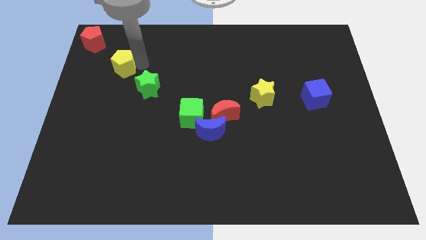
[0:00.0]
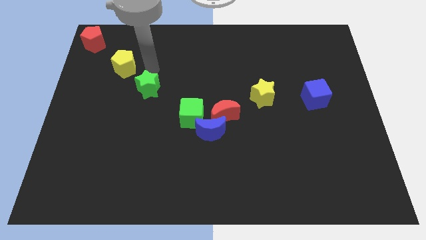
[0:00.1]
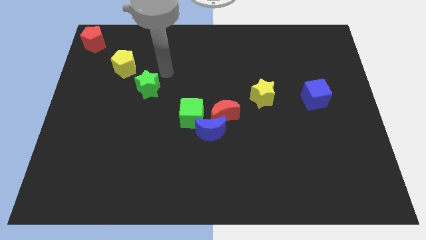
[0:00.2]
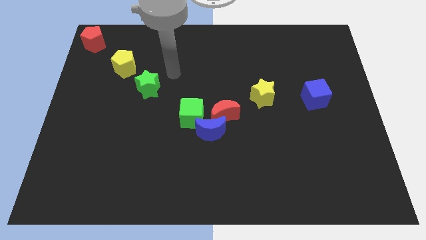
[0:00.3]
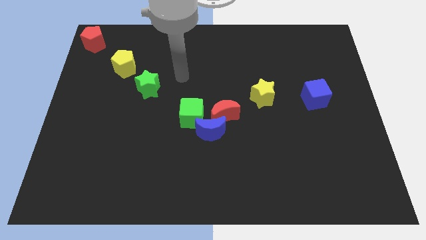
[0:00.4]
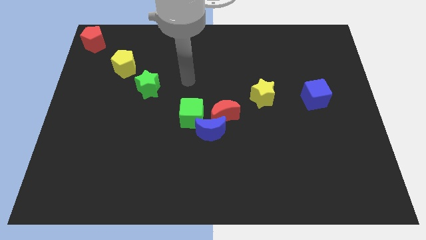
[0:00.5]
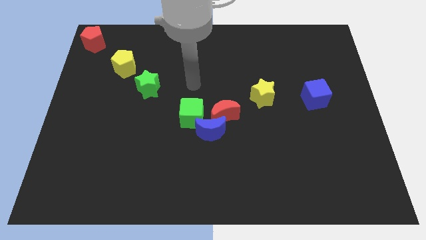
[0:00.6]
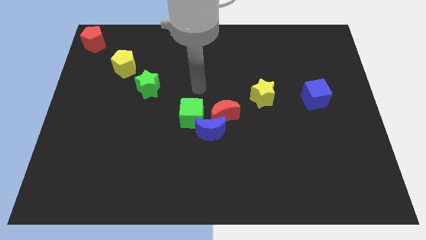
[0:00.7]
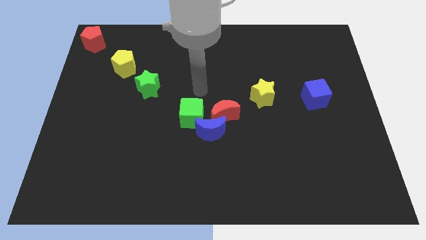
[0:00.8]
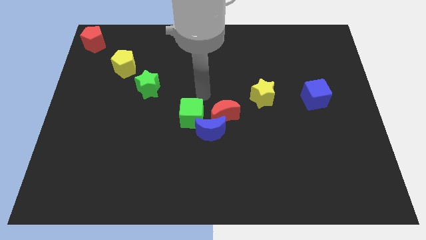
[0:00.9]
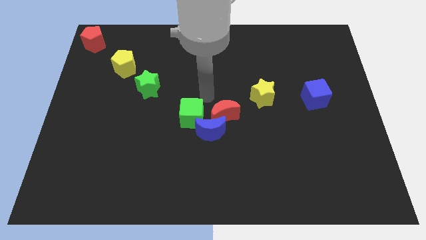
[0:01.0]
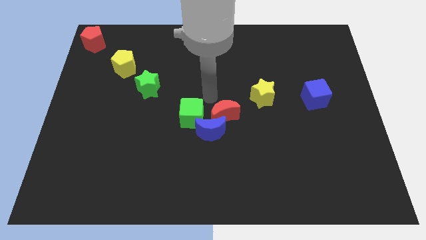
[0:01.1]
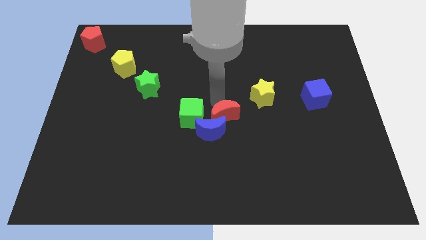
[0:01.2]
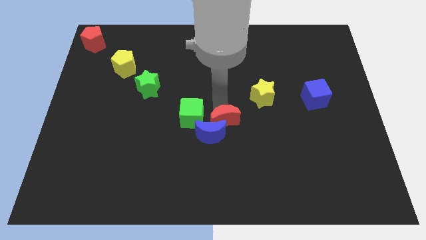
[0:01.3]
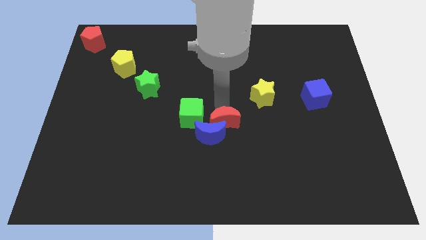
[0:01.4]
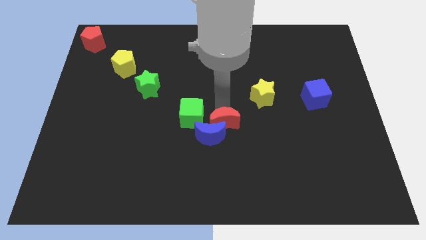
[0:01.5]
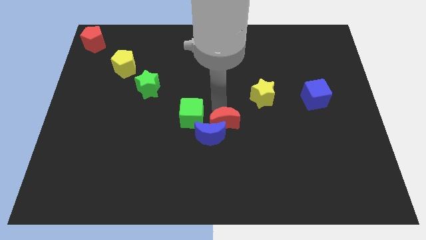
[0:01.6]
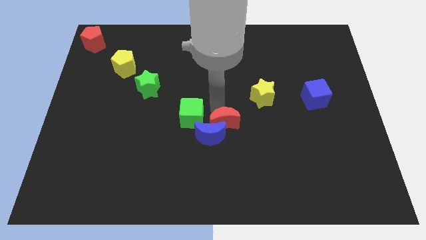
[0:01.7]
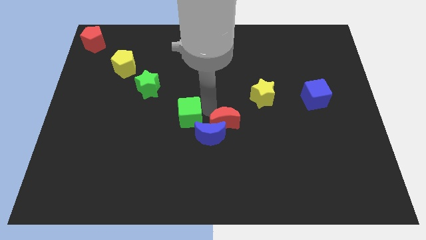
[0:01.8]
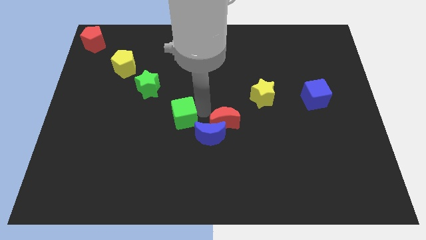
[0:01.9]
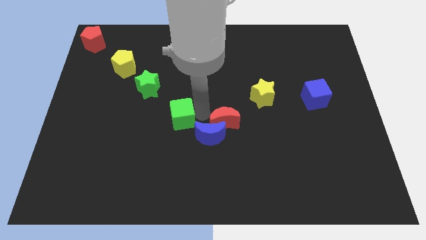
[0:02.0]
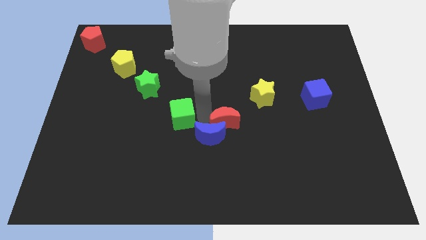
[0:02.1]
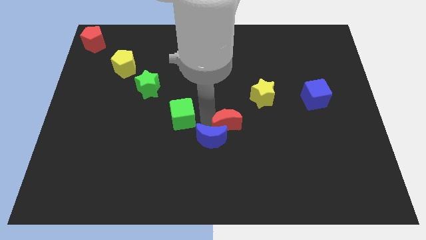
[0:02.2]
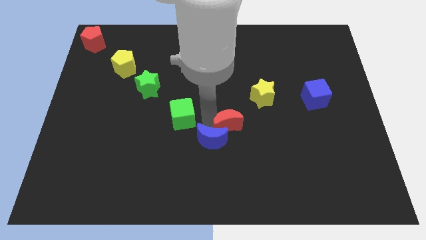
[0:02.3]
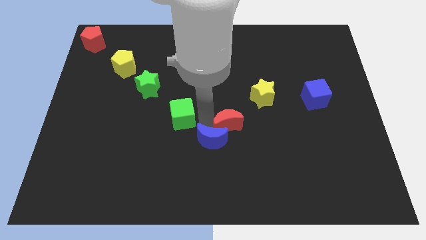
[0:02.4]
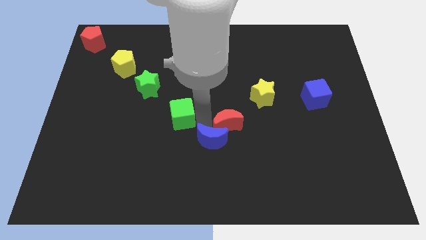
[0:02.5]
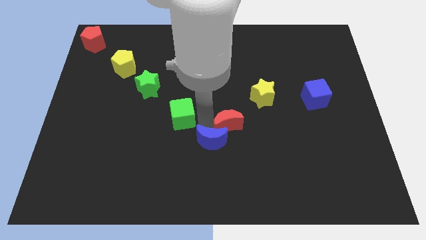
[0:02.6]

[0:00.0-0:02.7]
push the green cube slightly to the left

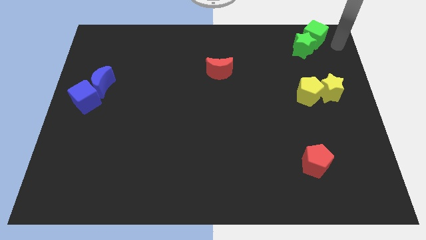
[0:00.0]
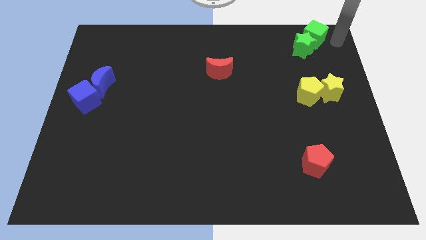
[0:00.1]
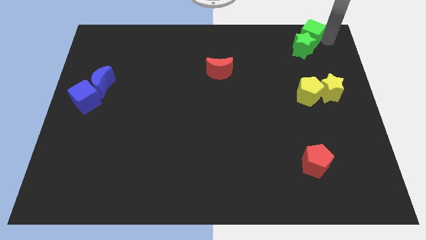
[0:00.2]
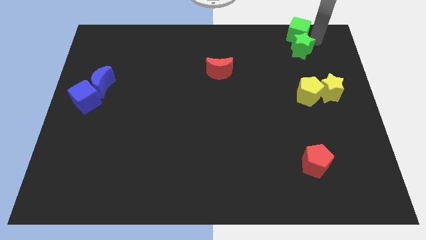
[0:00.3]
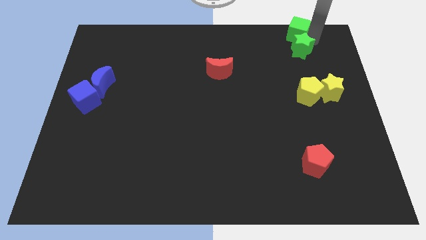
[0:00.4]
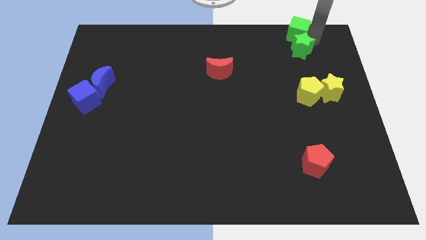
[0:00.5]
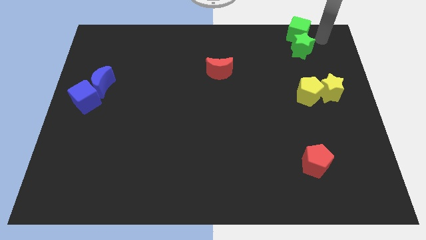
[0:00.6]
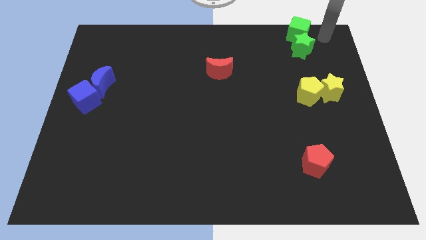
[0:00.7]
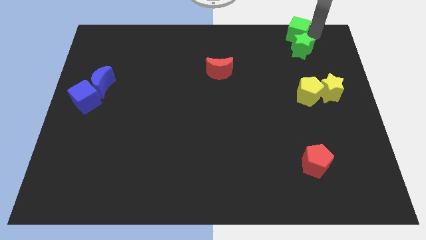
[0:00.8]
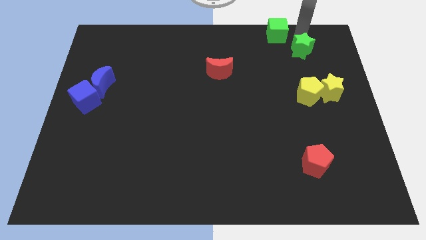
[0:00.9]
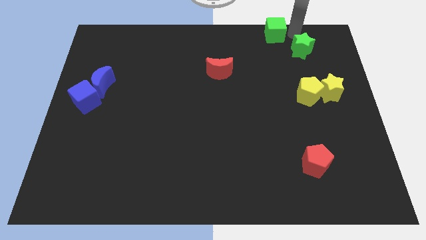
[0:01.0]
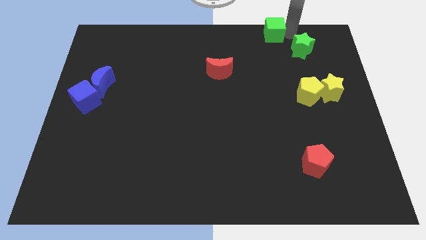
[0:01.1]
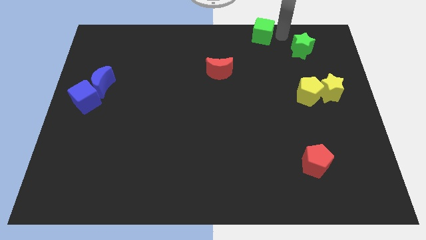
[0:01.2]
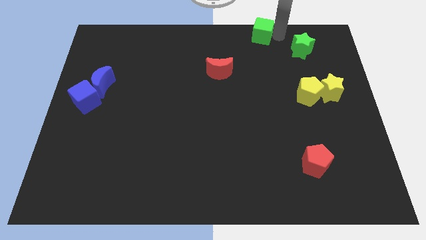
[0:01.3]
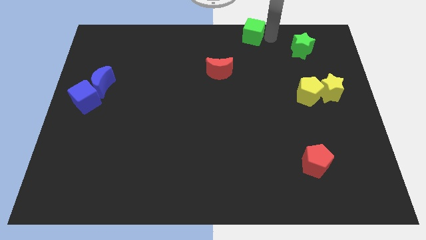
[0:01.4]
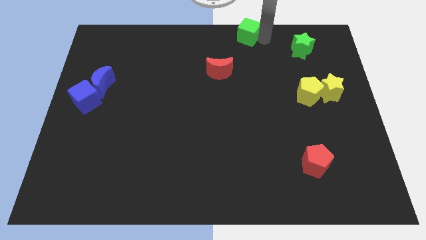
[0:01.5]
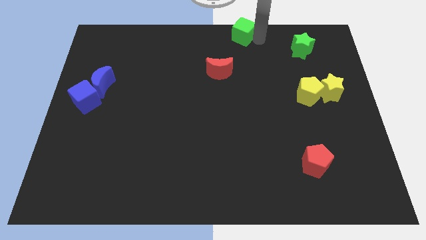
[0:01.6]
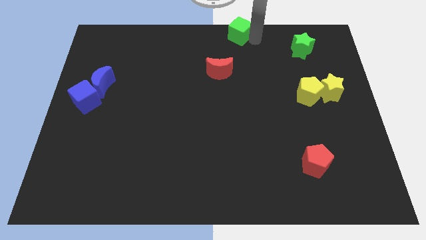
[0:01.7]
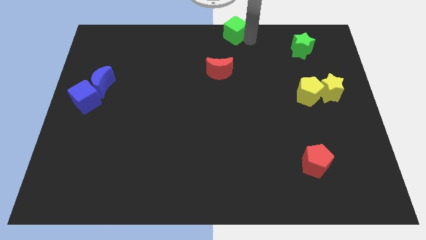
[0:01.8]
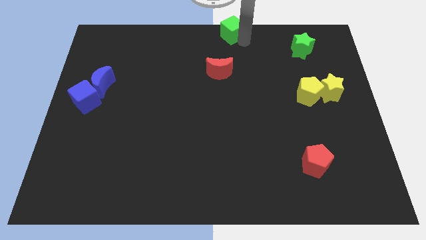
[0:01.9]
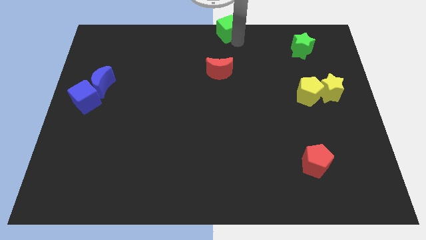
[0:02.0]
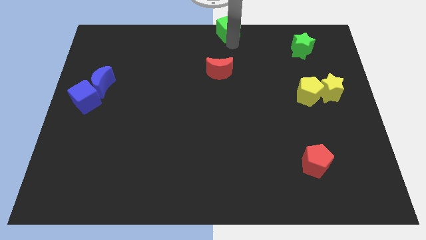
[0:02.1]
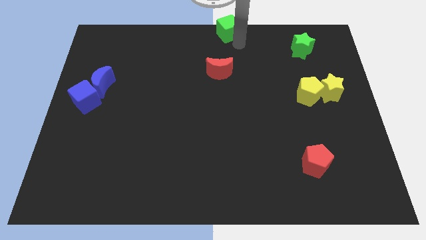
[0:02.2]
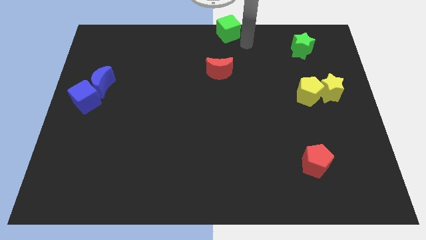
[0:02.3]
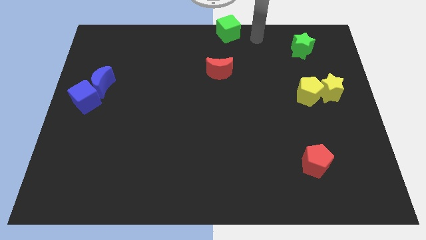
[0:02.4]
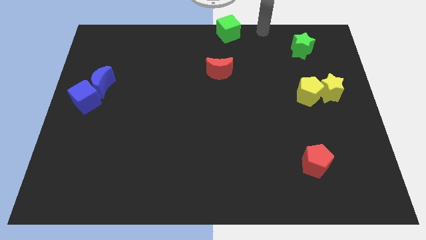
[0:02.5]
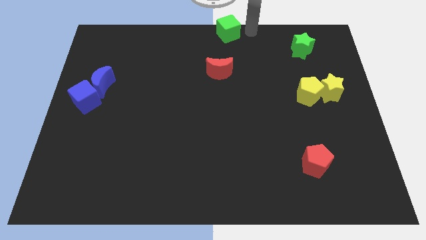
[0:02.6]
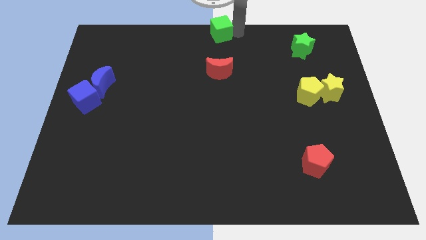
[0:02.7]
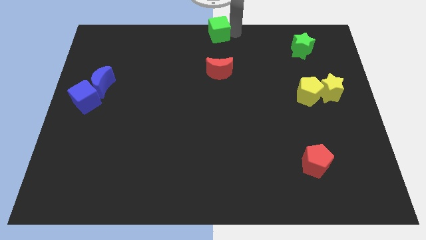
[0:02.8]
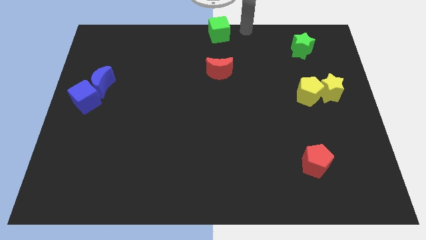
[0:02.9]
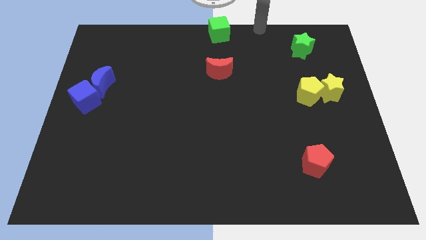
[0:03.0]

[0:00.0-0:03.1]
move the green cube to the top centre on the board

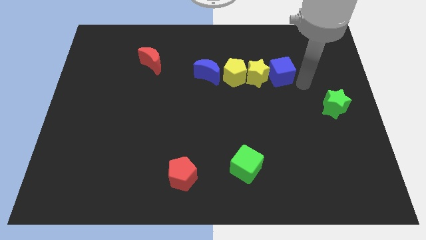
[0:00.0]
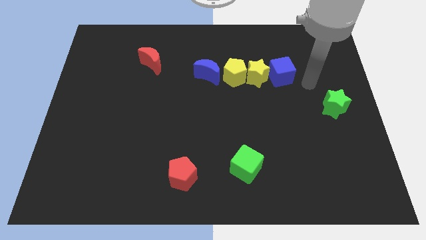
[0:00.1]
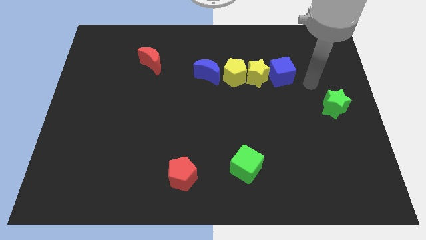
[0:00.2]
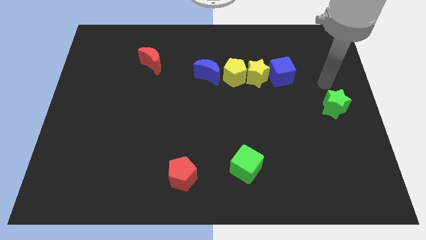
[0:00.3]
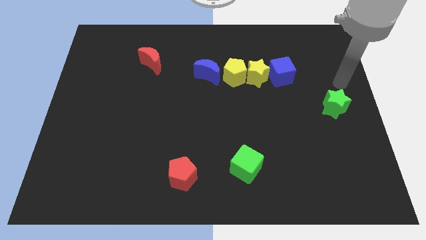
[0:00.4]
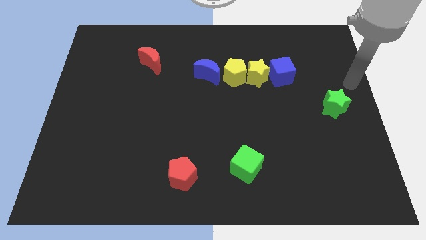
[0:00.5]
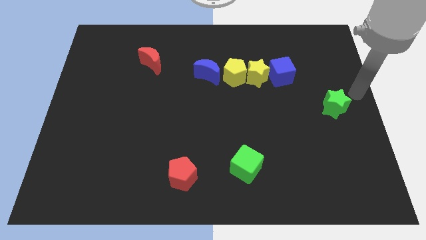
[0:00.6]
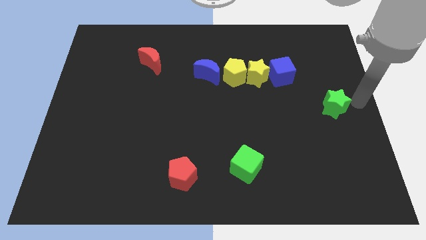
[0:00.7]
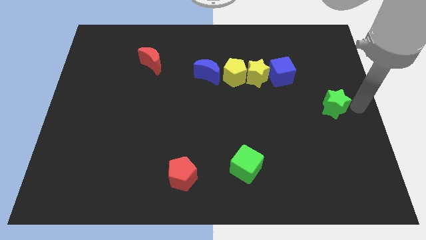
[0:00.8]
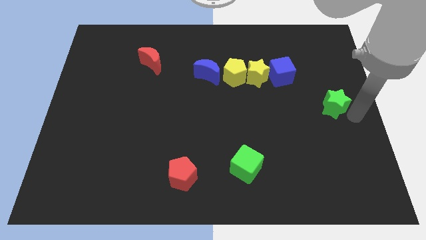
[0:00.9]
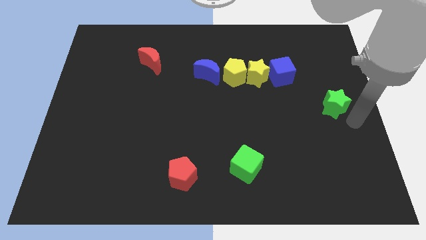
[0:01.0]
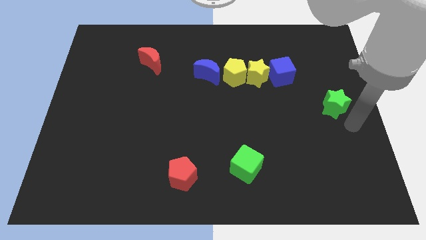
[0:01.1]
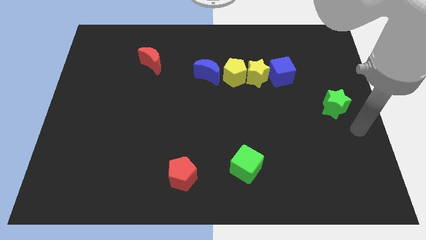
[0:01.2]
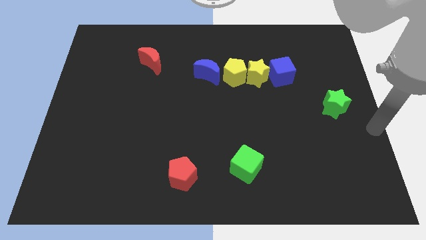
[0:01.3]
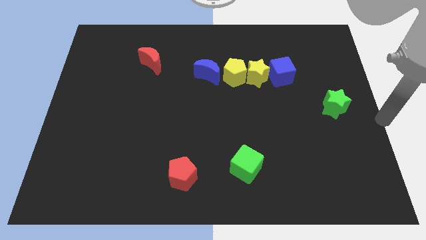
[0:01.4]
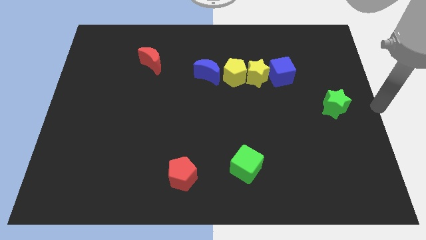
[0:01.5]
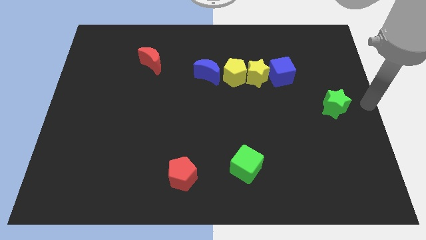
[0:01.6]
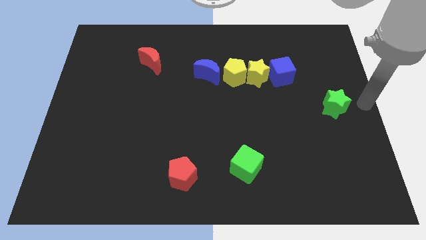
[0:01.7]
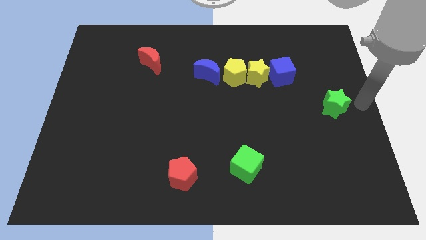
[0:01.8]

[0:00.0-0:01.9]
move your arm away from the blue cube

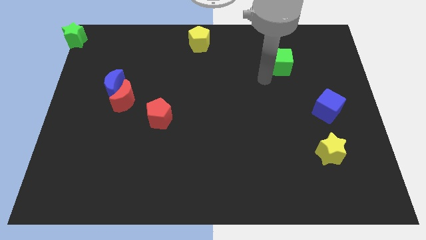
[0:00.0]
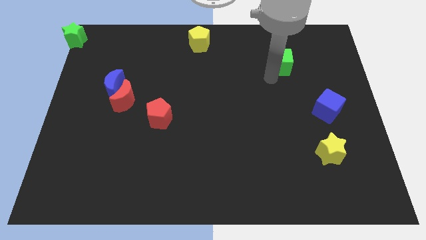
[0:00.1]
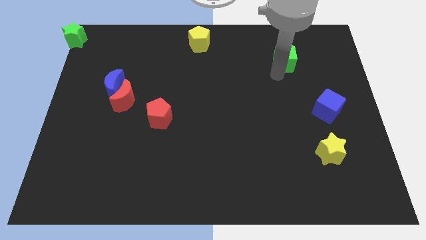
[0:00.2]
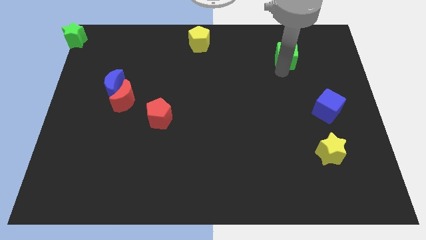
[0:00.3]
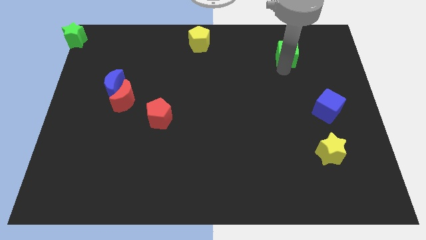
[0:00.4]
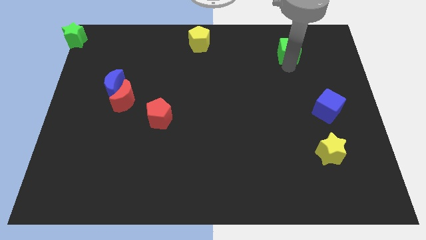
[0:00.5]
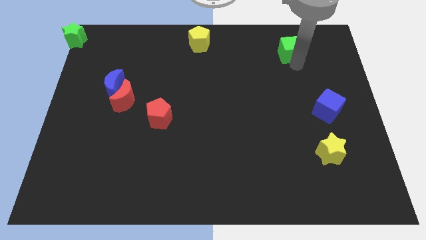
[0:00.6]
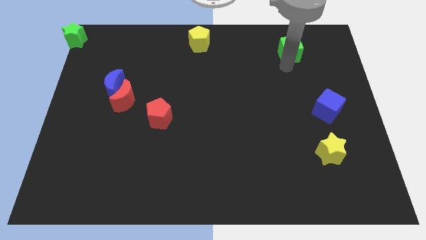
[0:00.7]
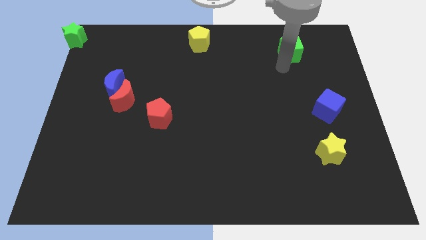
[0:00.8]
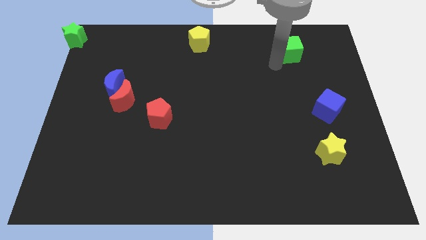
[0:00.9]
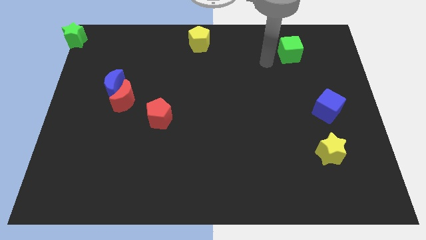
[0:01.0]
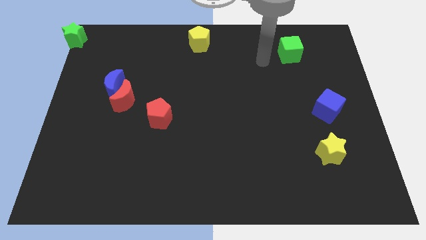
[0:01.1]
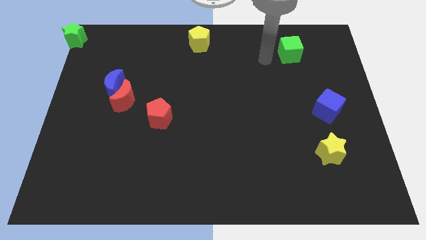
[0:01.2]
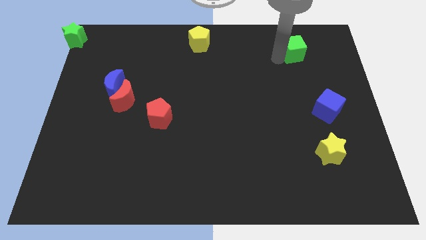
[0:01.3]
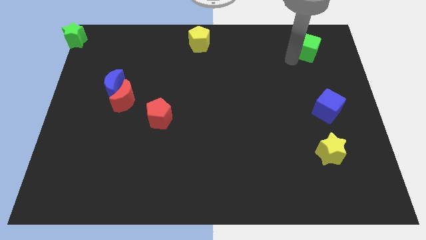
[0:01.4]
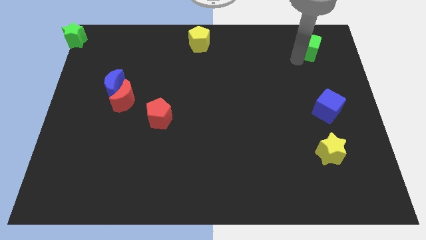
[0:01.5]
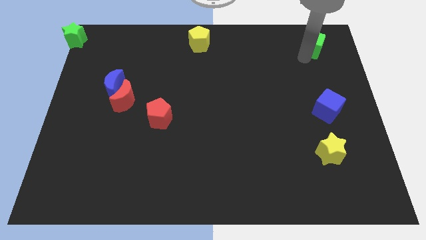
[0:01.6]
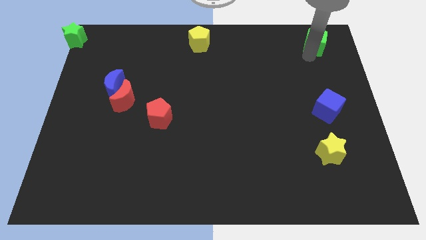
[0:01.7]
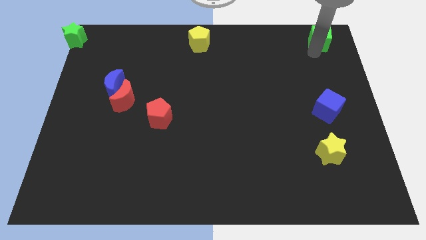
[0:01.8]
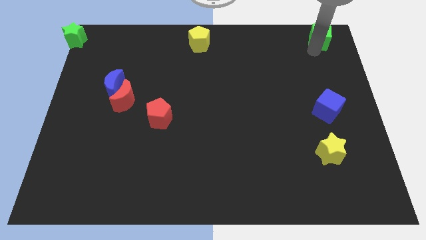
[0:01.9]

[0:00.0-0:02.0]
move the green cube to the top right
